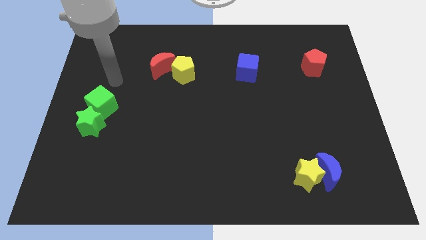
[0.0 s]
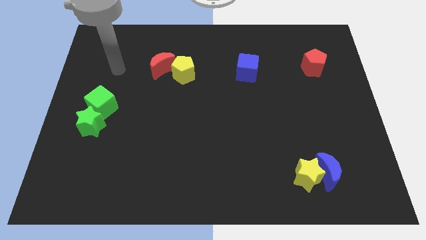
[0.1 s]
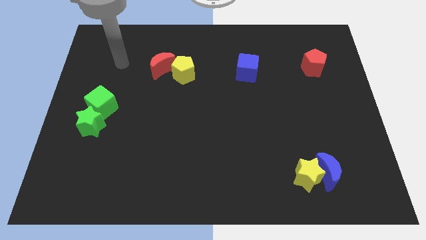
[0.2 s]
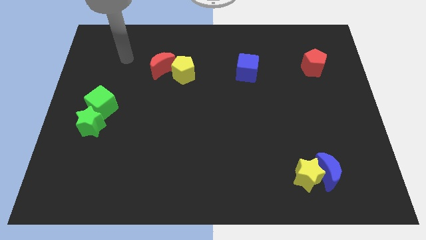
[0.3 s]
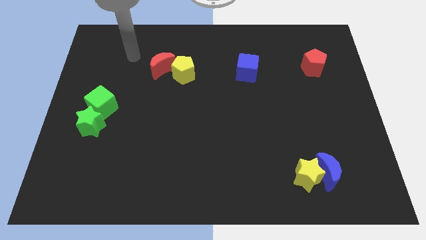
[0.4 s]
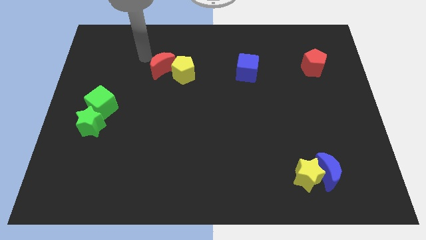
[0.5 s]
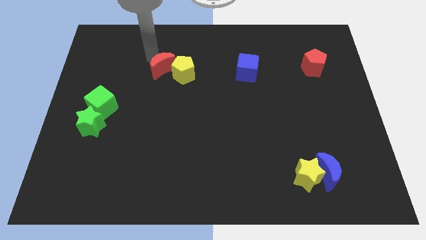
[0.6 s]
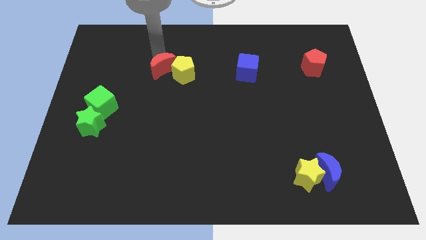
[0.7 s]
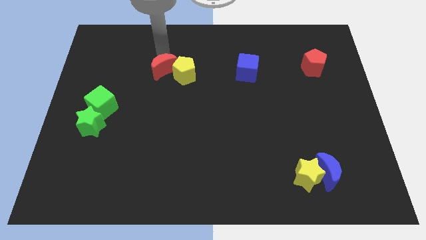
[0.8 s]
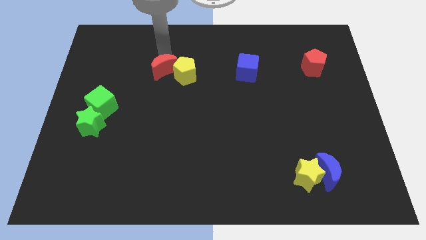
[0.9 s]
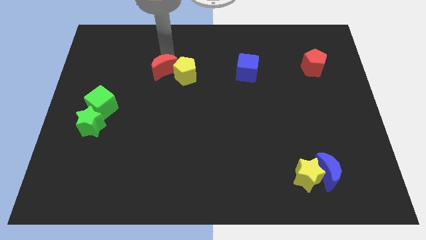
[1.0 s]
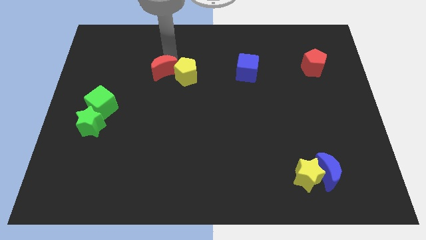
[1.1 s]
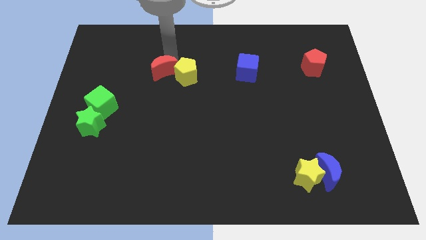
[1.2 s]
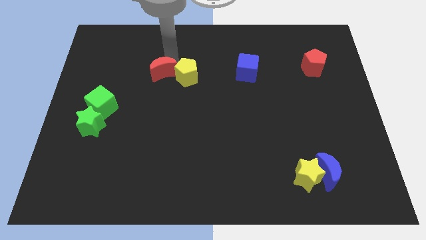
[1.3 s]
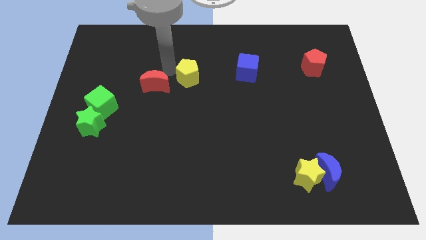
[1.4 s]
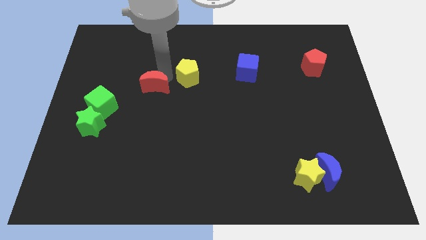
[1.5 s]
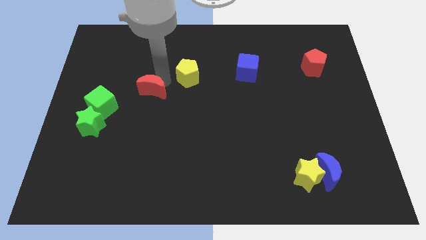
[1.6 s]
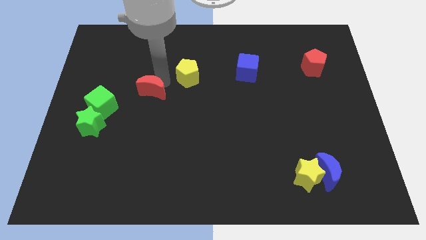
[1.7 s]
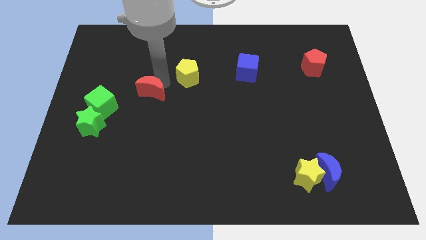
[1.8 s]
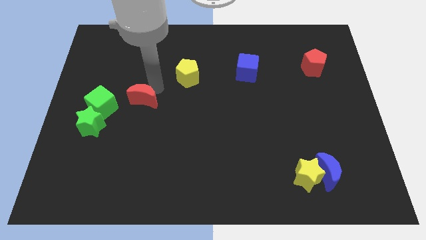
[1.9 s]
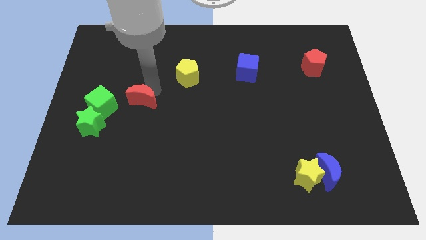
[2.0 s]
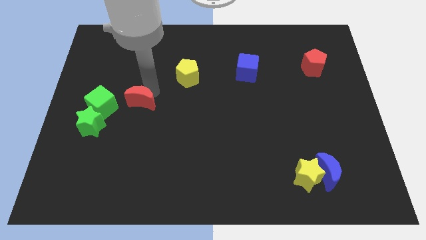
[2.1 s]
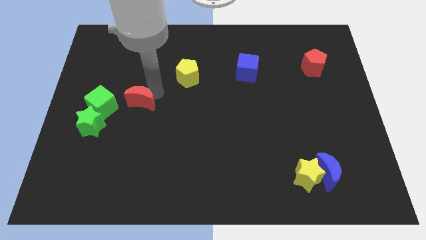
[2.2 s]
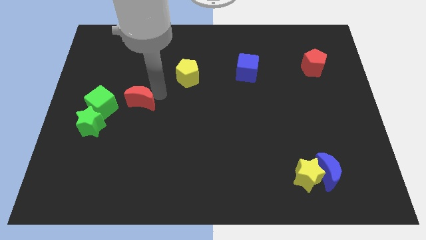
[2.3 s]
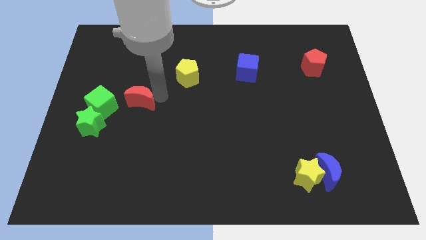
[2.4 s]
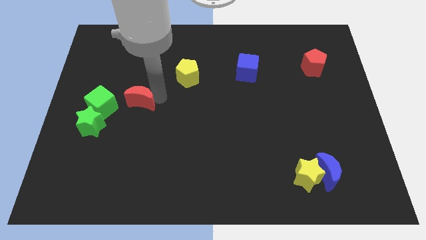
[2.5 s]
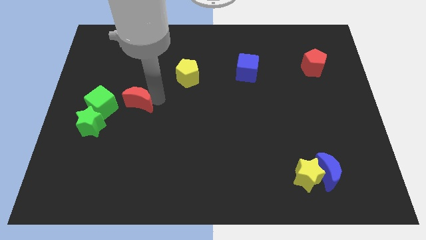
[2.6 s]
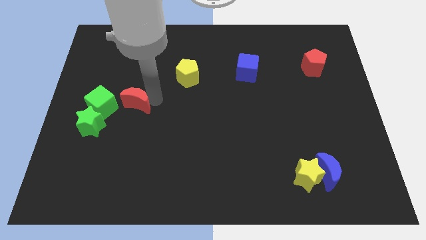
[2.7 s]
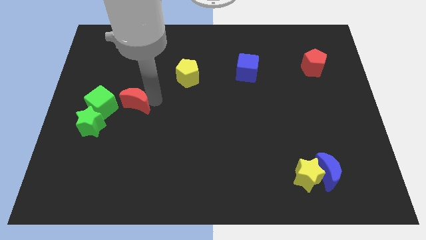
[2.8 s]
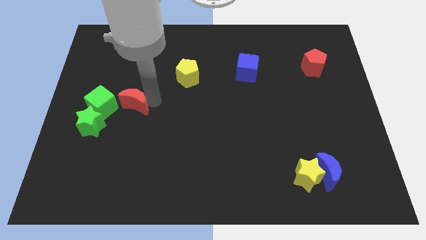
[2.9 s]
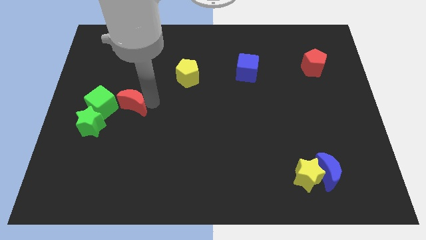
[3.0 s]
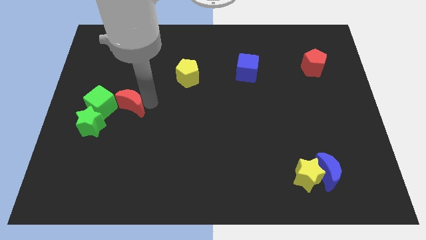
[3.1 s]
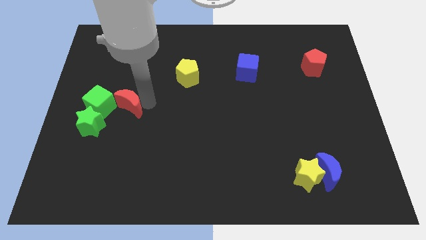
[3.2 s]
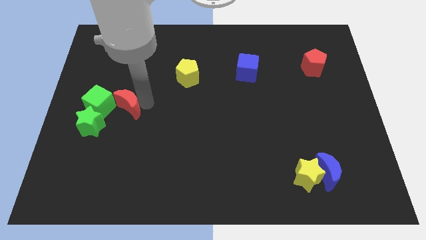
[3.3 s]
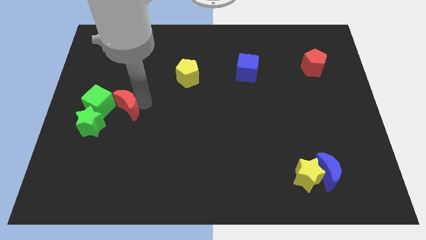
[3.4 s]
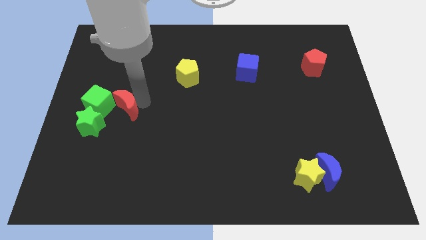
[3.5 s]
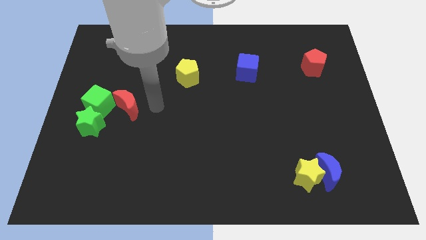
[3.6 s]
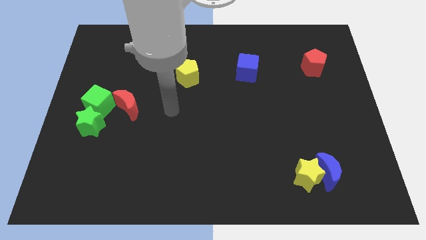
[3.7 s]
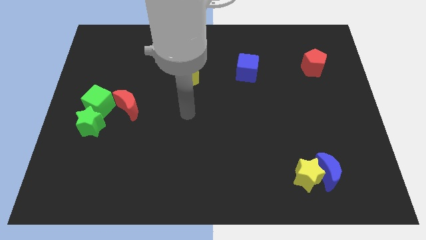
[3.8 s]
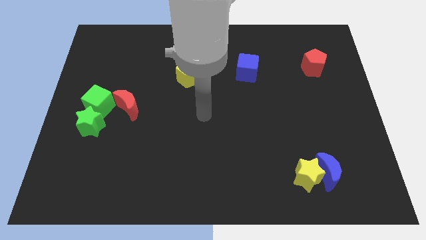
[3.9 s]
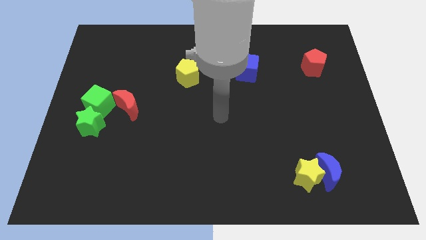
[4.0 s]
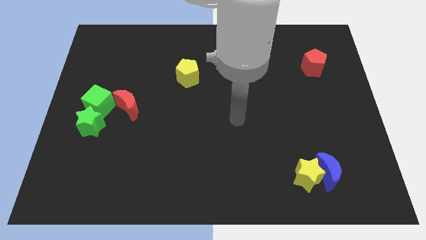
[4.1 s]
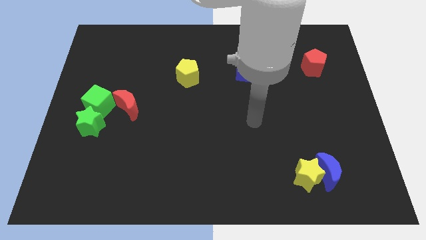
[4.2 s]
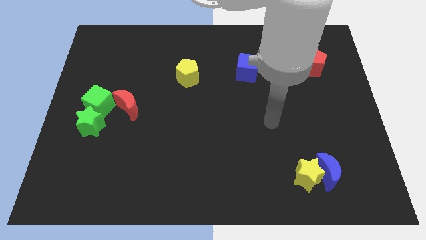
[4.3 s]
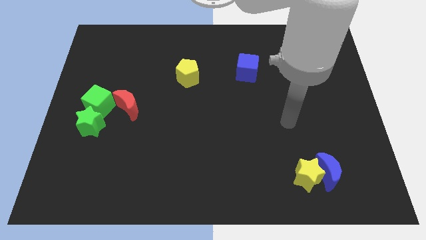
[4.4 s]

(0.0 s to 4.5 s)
move the red crescent to the right of the green cube

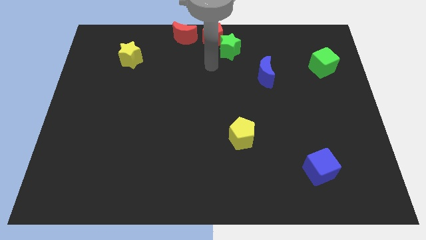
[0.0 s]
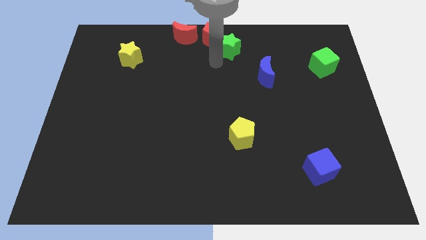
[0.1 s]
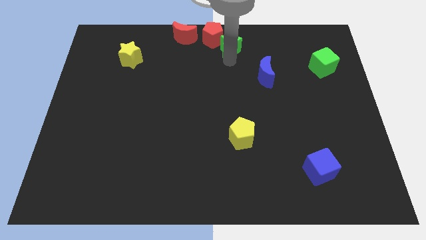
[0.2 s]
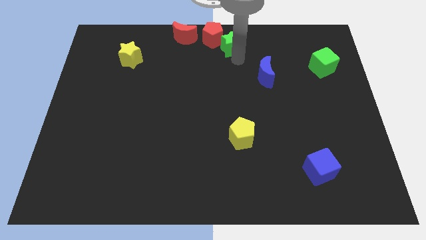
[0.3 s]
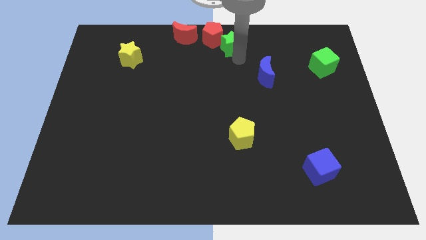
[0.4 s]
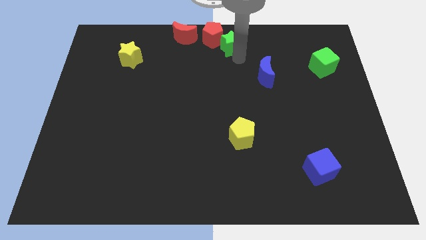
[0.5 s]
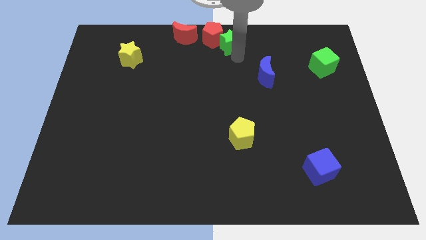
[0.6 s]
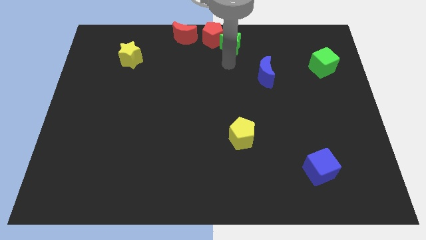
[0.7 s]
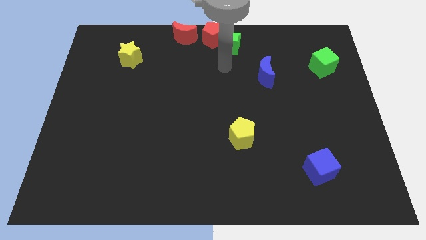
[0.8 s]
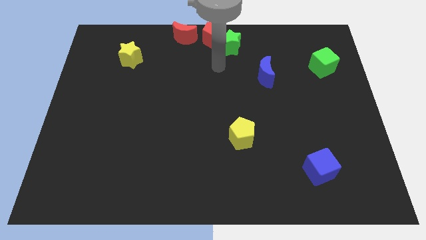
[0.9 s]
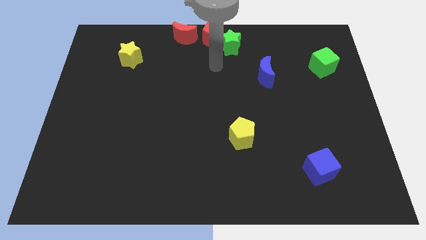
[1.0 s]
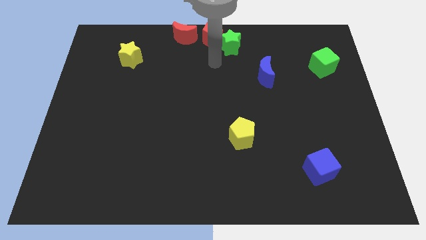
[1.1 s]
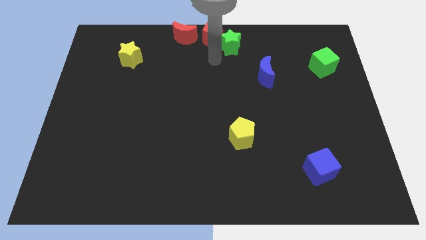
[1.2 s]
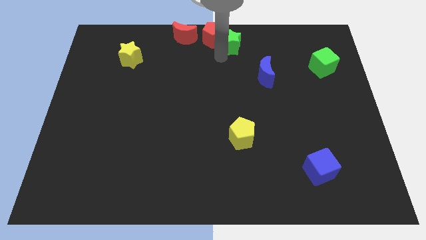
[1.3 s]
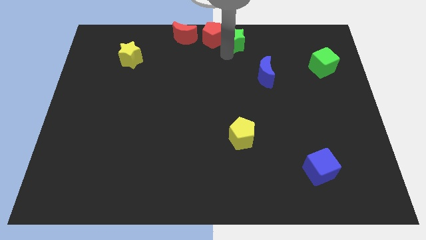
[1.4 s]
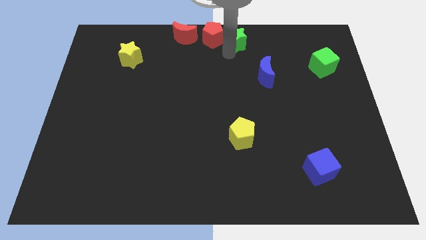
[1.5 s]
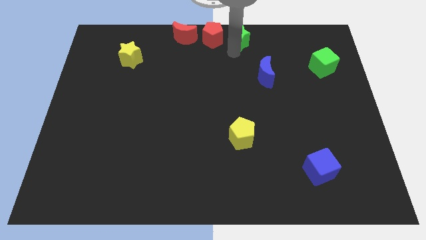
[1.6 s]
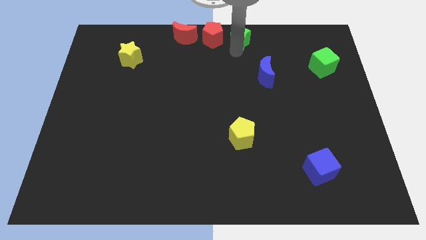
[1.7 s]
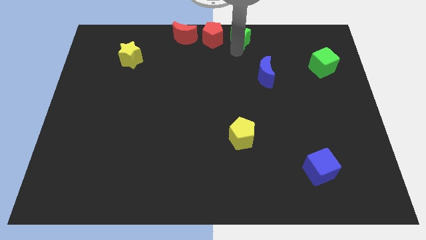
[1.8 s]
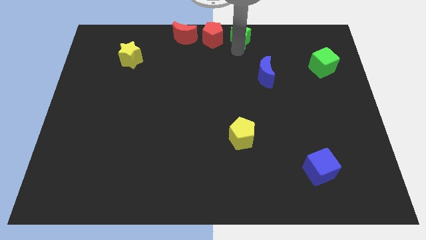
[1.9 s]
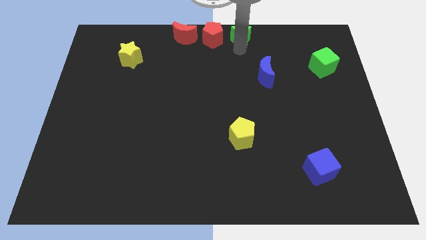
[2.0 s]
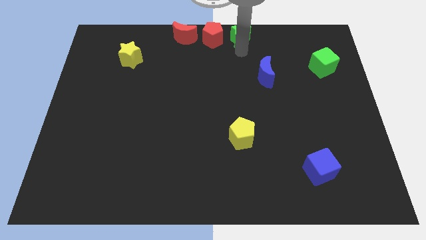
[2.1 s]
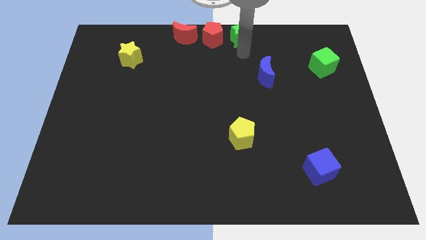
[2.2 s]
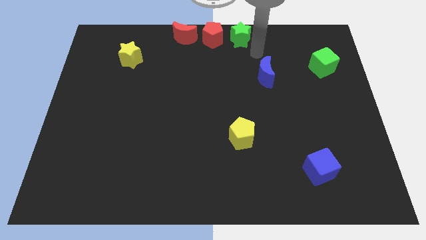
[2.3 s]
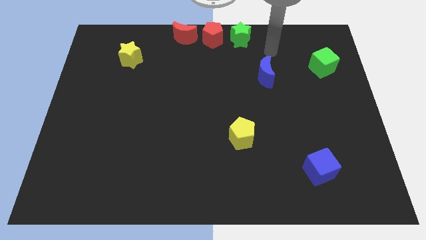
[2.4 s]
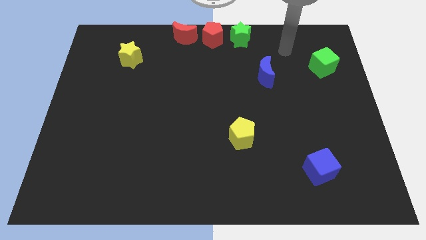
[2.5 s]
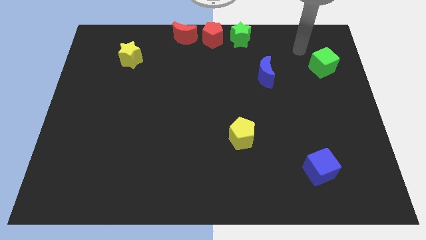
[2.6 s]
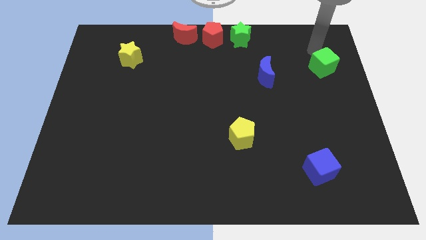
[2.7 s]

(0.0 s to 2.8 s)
place green star right to red pentagon

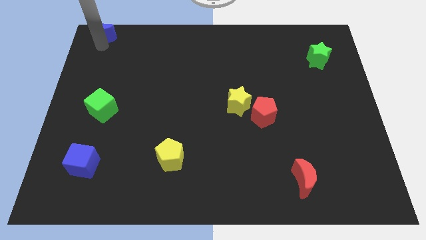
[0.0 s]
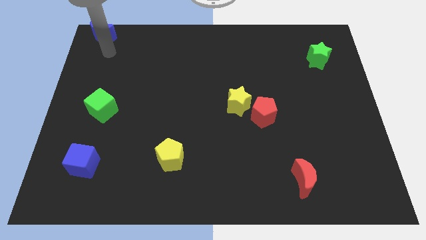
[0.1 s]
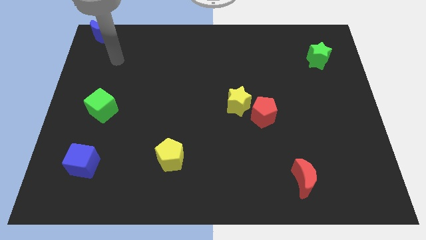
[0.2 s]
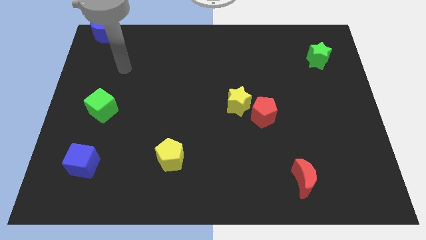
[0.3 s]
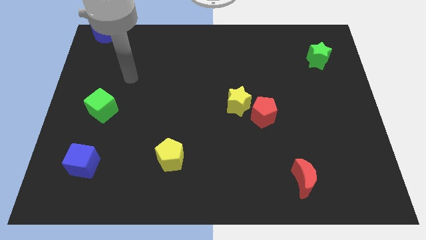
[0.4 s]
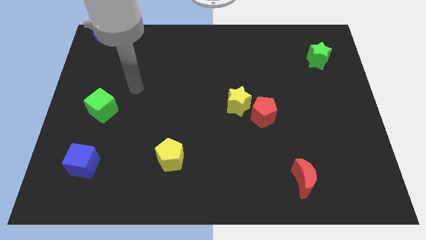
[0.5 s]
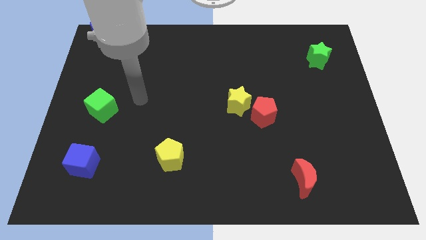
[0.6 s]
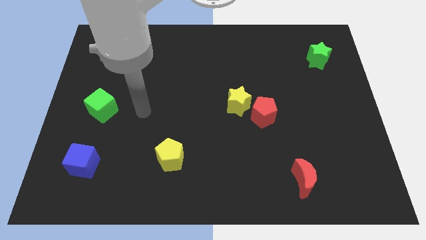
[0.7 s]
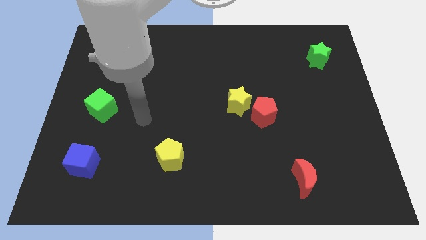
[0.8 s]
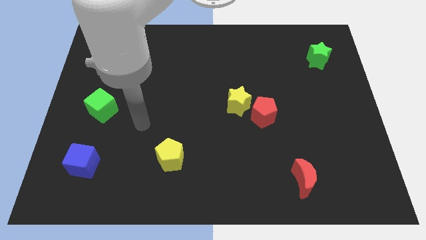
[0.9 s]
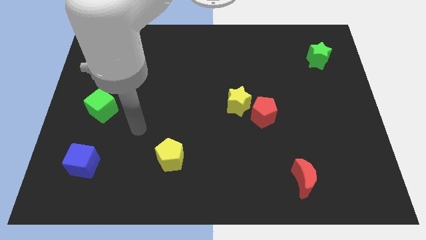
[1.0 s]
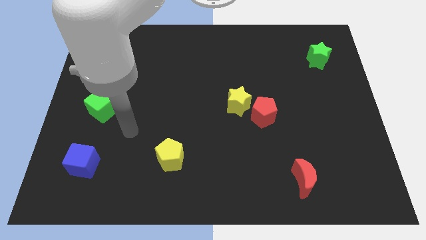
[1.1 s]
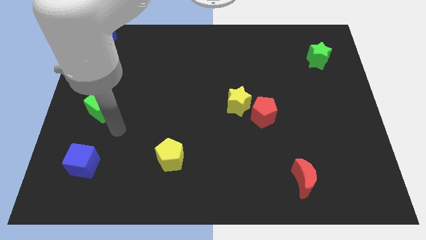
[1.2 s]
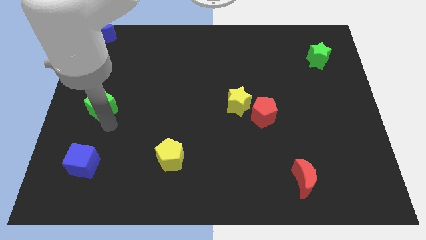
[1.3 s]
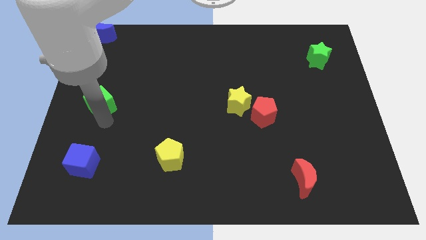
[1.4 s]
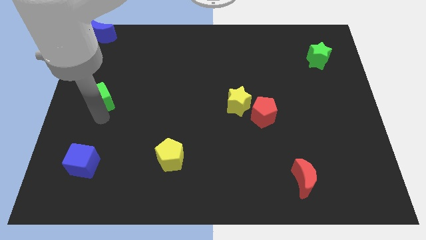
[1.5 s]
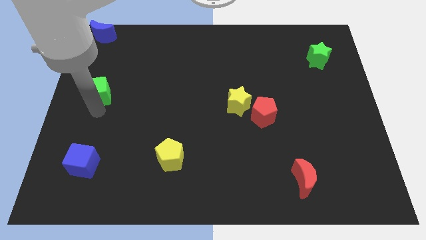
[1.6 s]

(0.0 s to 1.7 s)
move your arm away from blue moon
